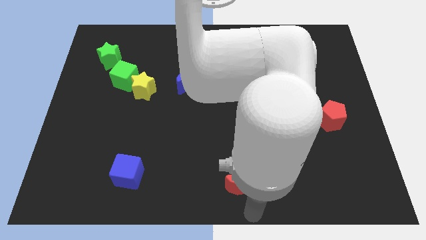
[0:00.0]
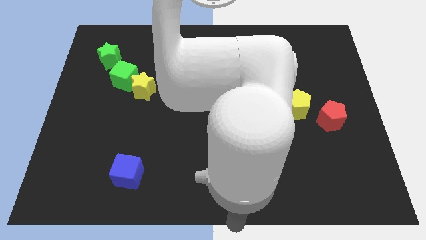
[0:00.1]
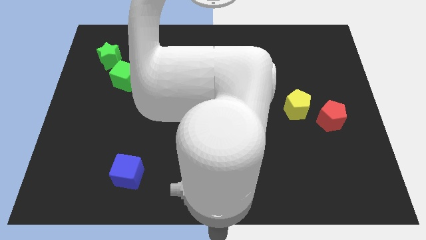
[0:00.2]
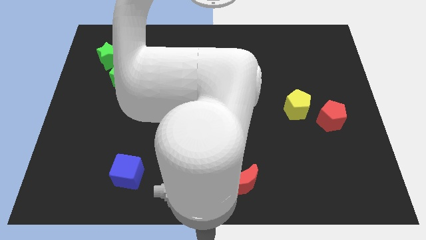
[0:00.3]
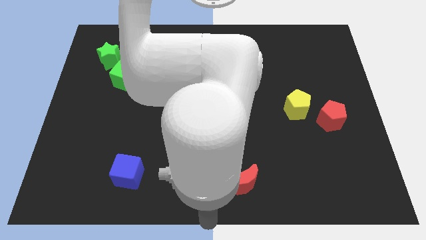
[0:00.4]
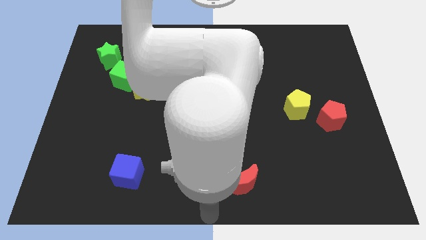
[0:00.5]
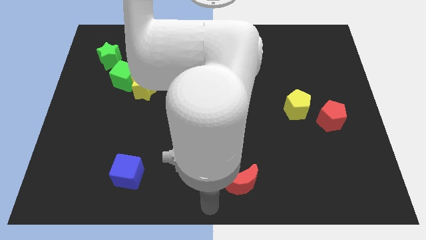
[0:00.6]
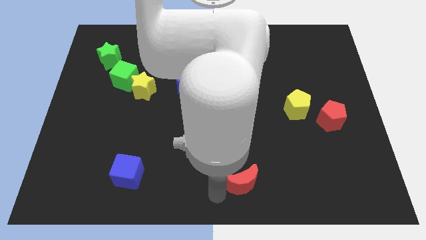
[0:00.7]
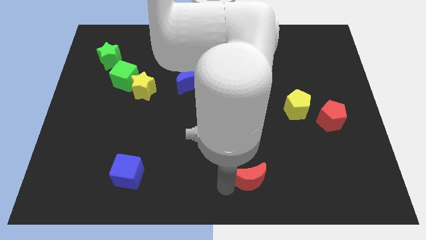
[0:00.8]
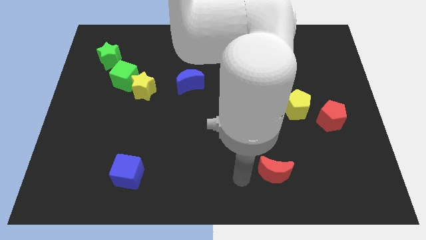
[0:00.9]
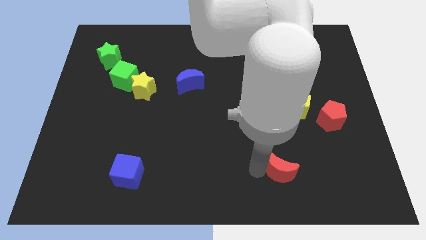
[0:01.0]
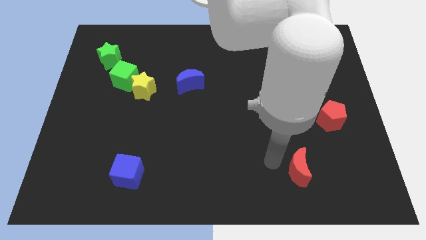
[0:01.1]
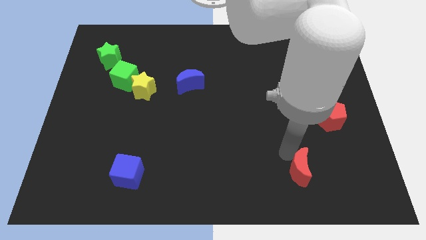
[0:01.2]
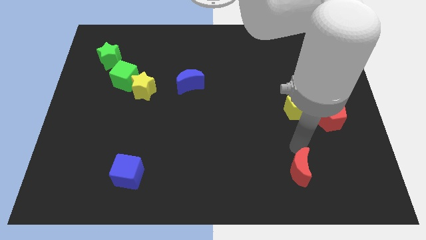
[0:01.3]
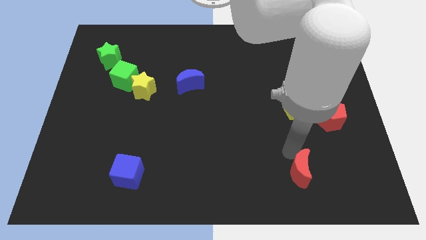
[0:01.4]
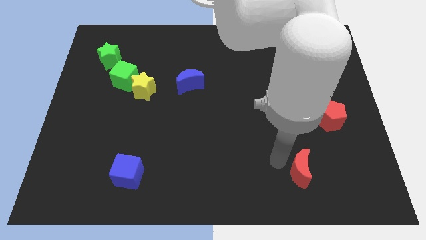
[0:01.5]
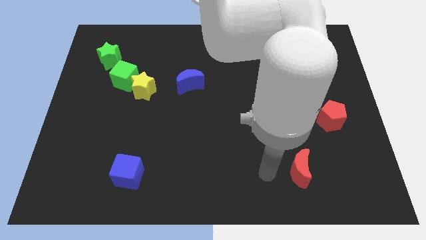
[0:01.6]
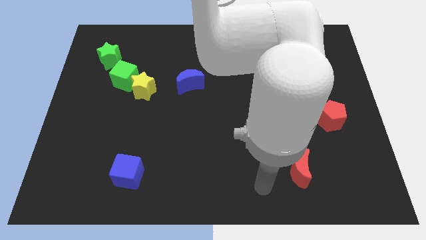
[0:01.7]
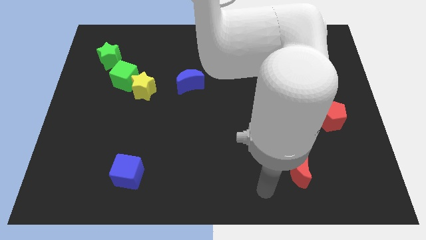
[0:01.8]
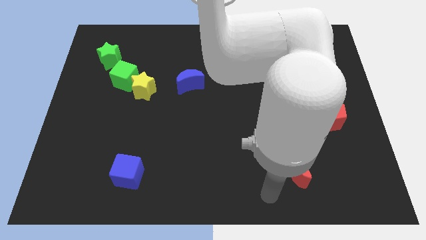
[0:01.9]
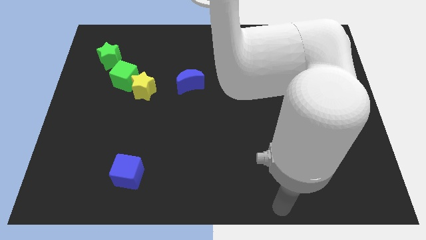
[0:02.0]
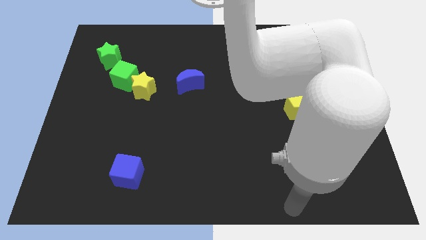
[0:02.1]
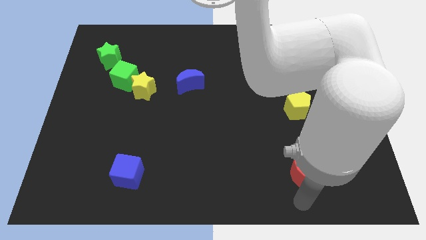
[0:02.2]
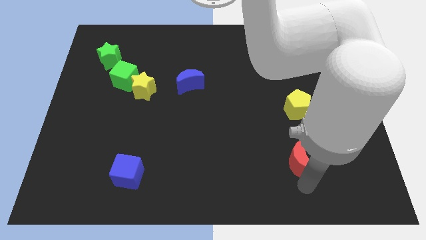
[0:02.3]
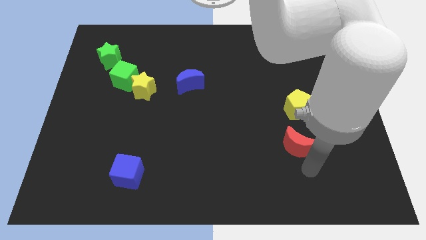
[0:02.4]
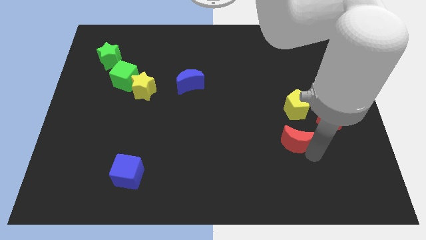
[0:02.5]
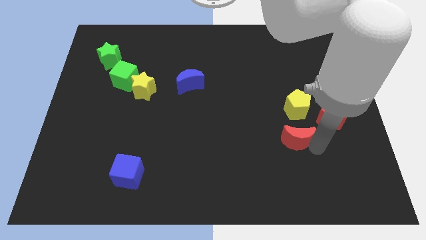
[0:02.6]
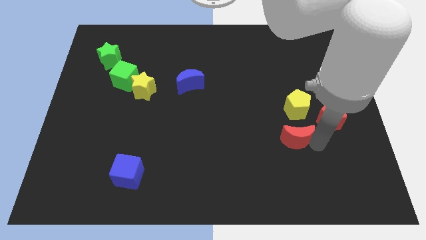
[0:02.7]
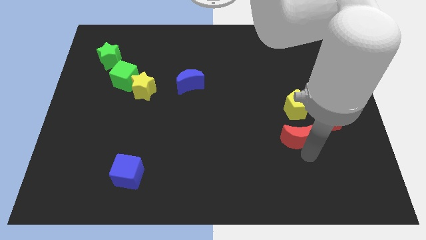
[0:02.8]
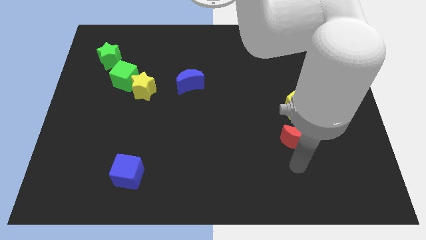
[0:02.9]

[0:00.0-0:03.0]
move the red moon below to the yellow pentagon

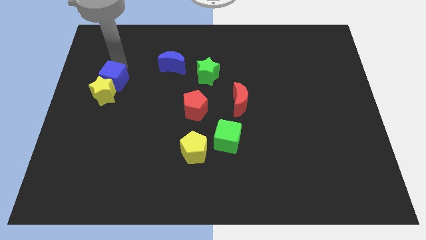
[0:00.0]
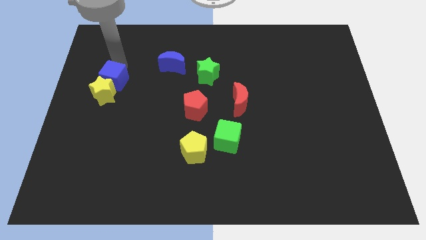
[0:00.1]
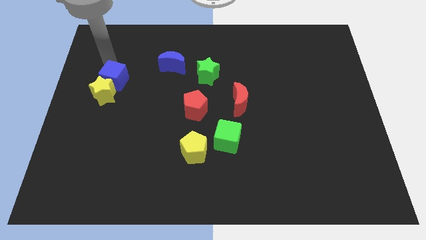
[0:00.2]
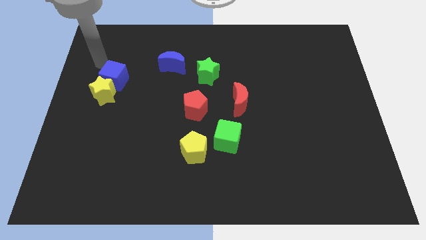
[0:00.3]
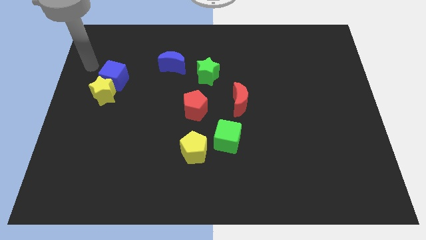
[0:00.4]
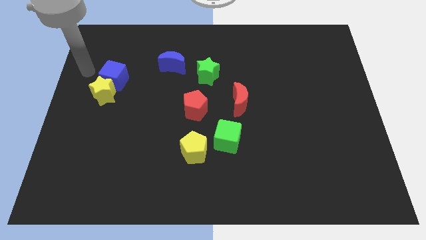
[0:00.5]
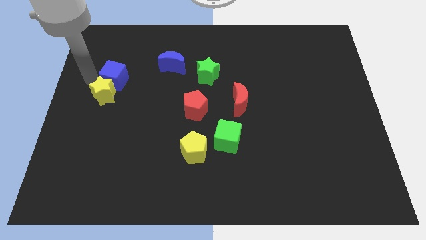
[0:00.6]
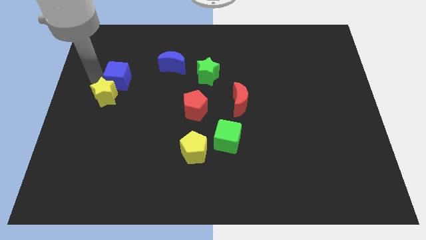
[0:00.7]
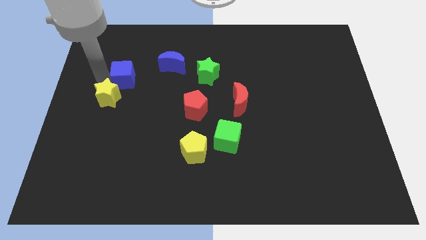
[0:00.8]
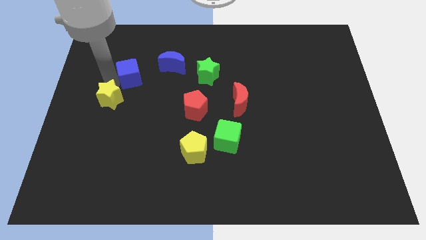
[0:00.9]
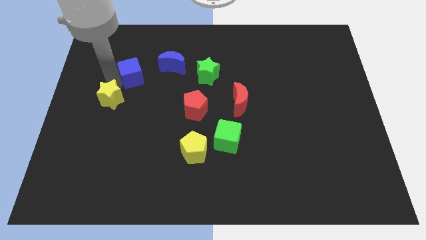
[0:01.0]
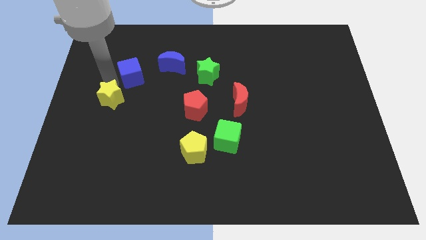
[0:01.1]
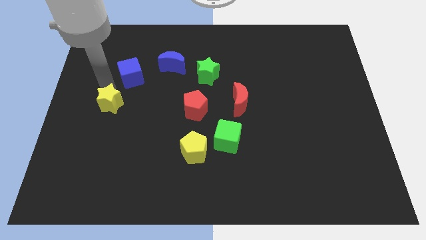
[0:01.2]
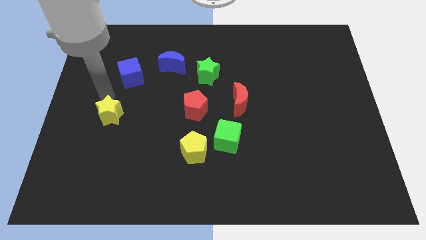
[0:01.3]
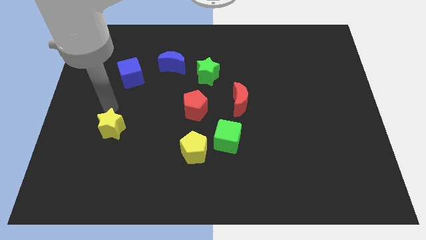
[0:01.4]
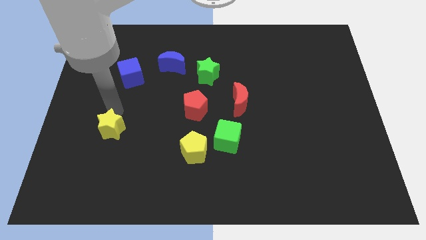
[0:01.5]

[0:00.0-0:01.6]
separate yellow star from blue cube

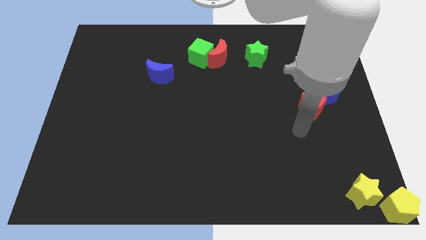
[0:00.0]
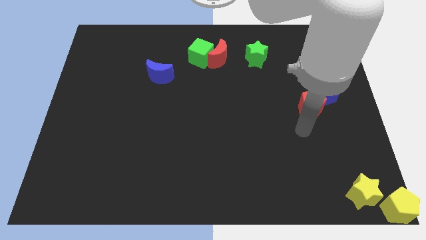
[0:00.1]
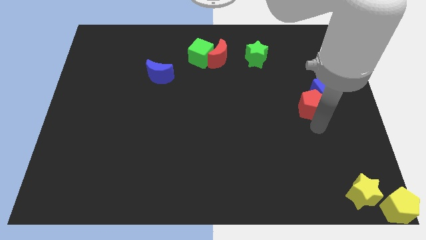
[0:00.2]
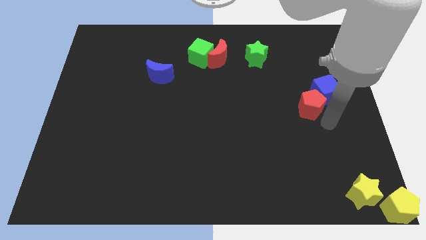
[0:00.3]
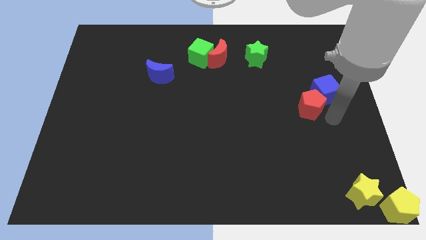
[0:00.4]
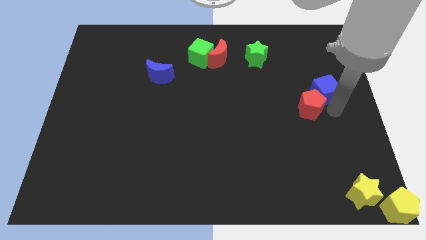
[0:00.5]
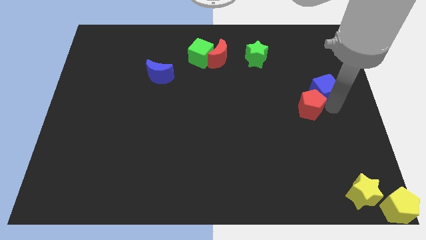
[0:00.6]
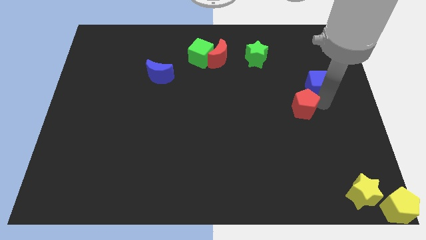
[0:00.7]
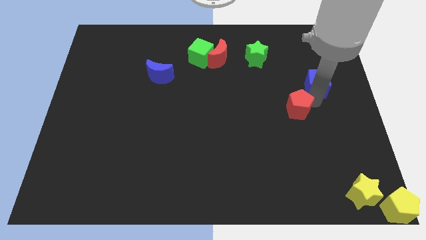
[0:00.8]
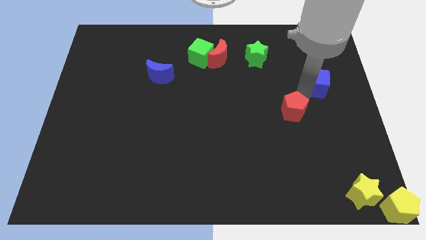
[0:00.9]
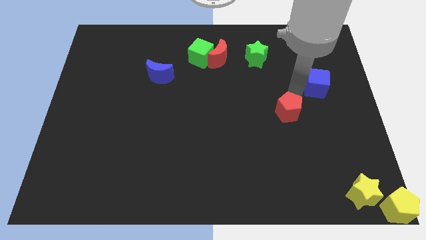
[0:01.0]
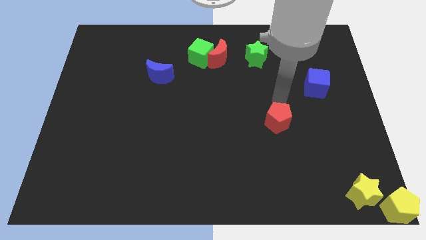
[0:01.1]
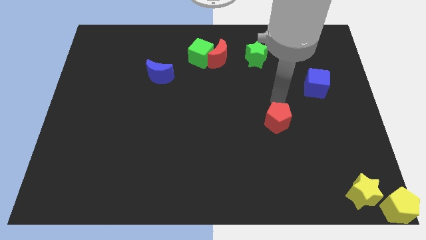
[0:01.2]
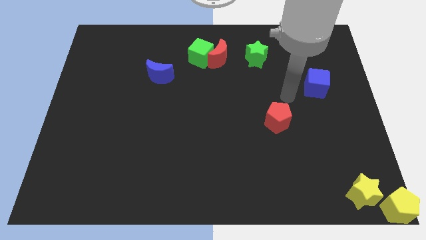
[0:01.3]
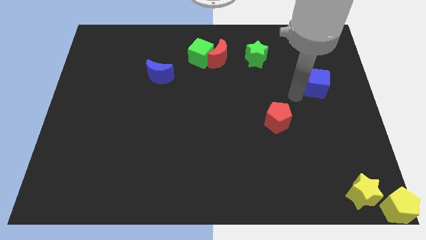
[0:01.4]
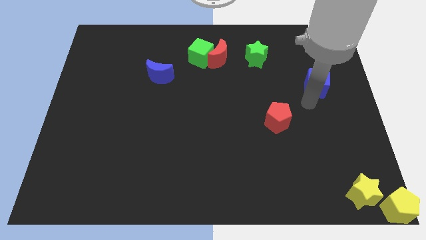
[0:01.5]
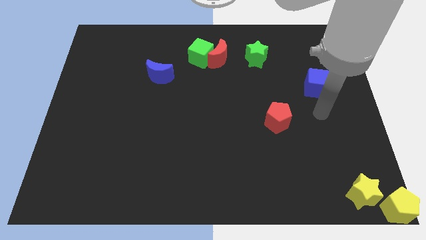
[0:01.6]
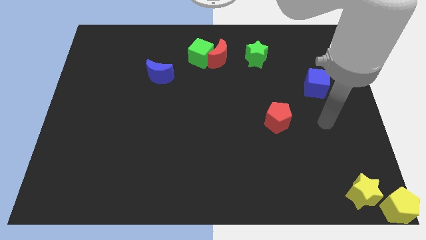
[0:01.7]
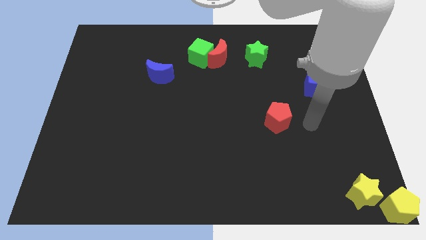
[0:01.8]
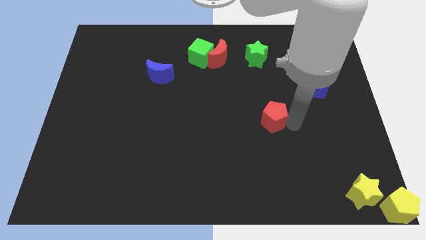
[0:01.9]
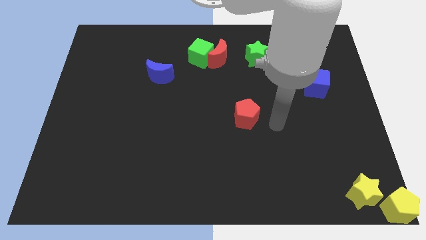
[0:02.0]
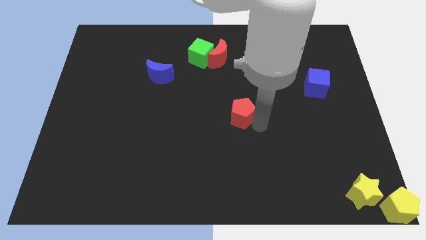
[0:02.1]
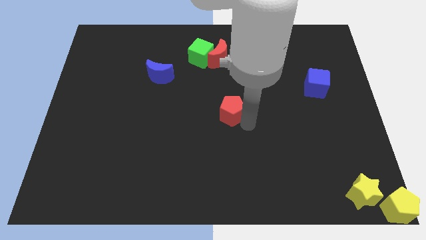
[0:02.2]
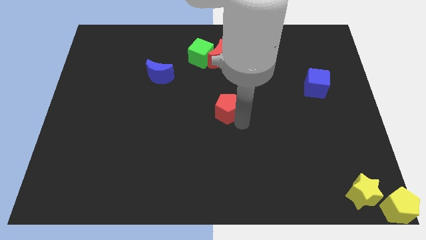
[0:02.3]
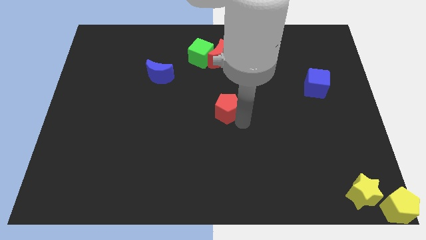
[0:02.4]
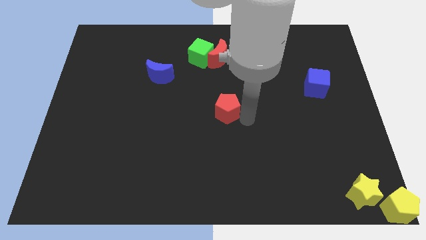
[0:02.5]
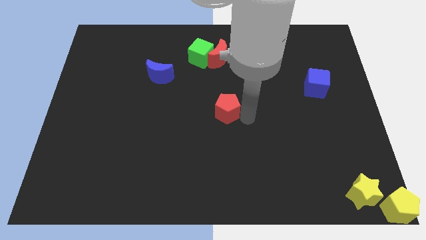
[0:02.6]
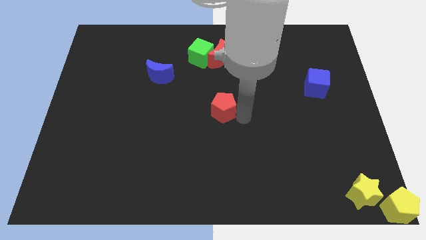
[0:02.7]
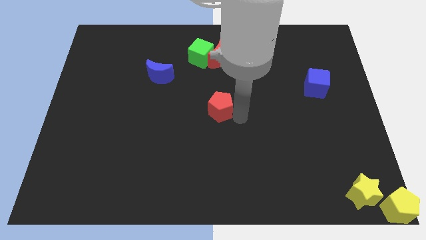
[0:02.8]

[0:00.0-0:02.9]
move the red pentagon to the center

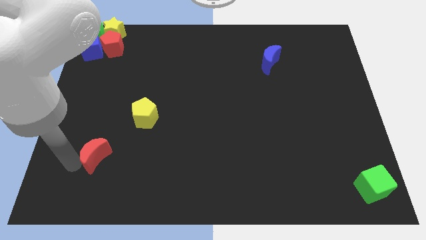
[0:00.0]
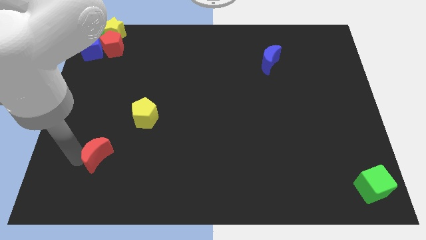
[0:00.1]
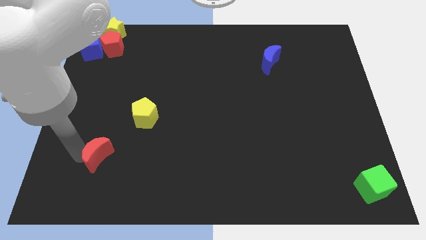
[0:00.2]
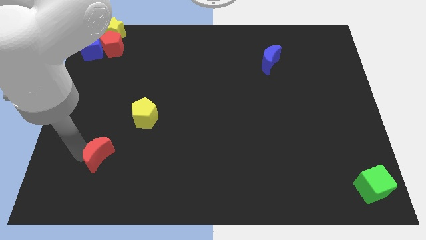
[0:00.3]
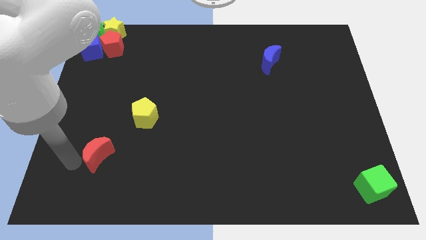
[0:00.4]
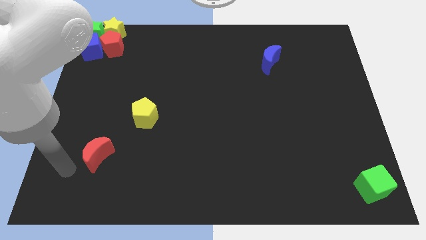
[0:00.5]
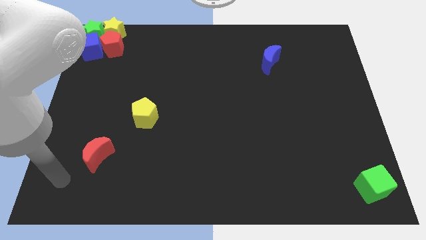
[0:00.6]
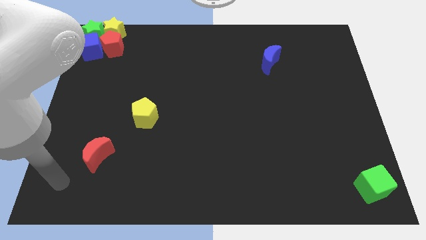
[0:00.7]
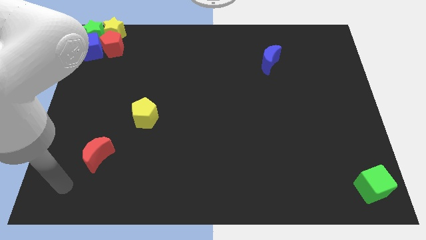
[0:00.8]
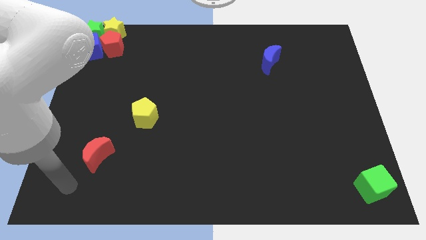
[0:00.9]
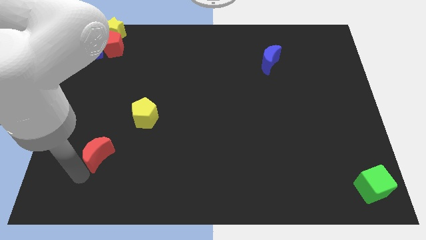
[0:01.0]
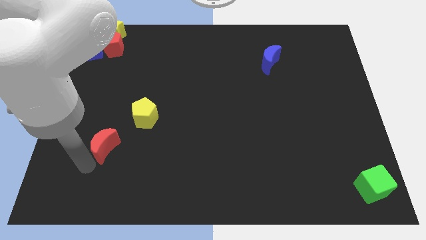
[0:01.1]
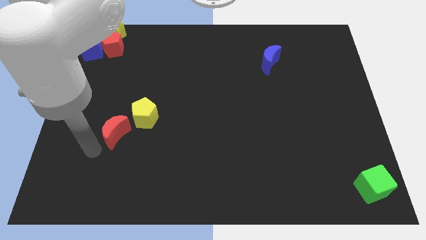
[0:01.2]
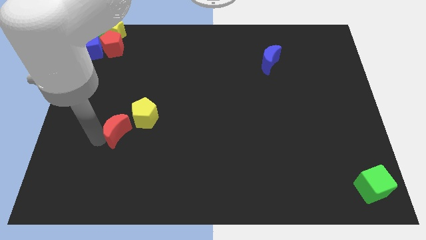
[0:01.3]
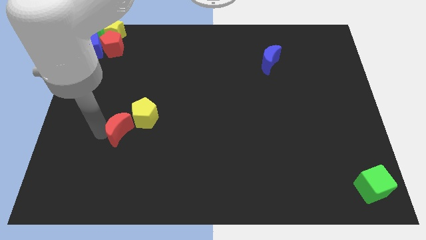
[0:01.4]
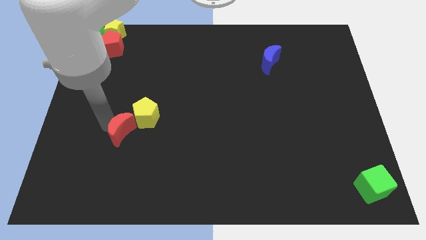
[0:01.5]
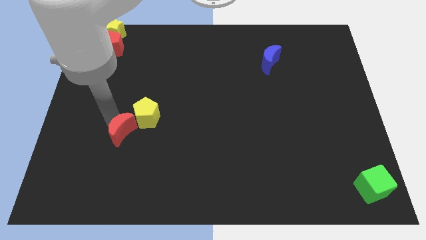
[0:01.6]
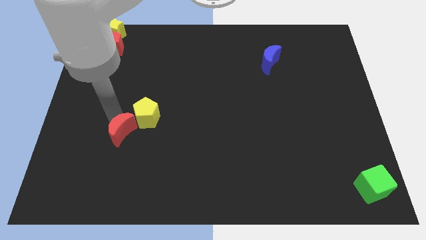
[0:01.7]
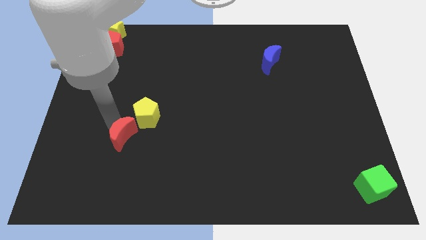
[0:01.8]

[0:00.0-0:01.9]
push the red crescent into the yellow pentagon
